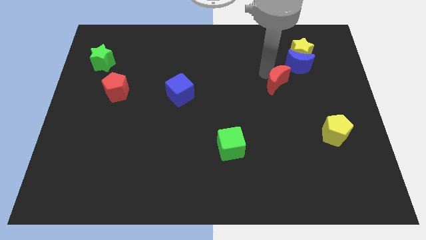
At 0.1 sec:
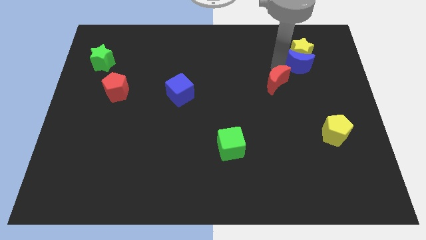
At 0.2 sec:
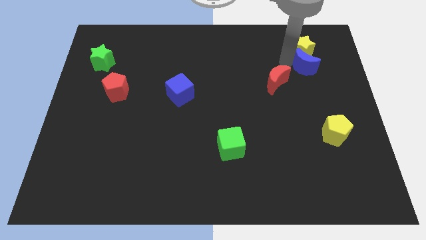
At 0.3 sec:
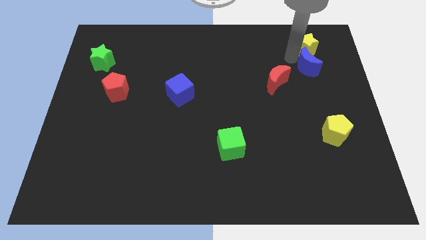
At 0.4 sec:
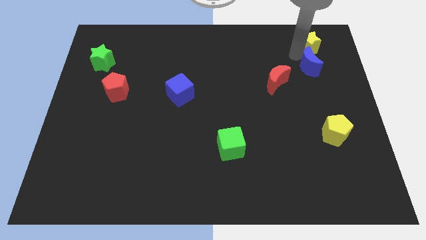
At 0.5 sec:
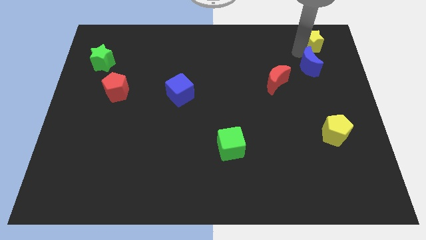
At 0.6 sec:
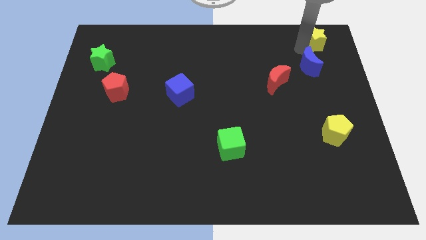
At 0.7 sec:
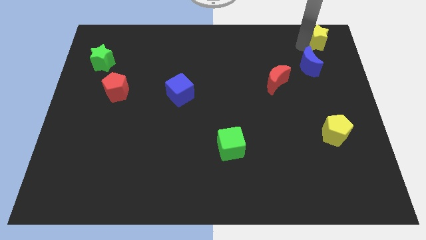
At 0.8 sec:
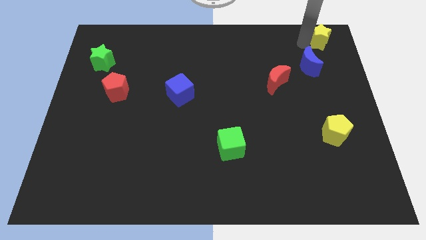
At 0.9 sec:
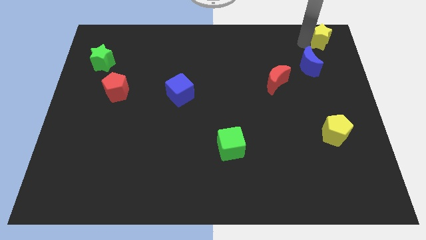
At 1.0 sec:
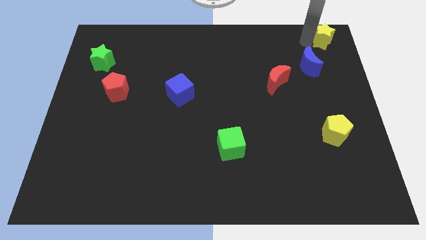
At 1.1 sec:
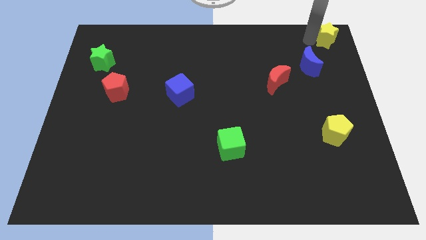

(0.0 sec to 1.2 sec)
separate the blue crescent and yellow star

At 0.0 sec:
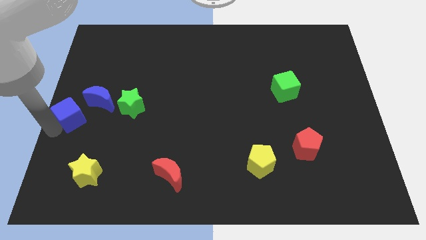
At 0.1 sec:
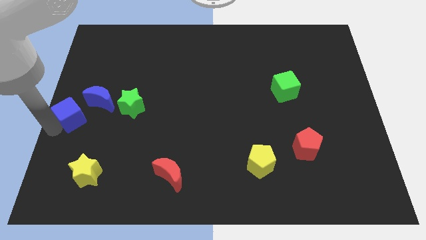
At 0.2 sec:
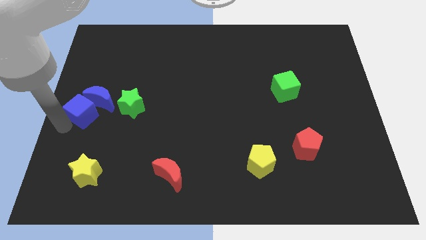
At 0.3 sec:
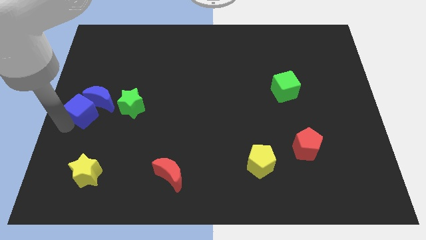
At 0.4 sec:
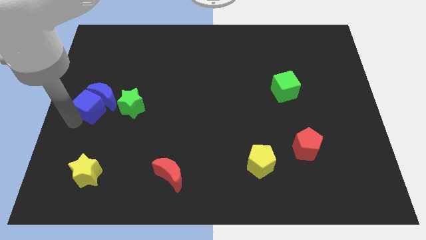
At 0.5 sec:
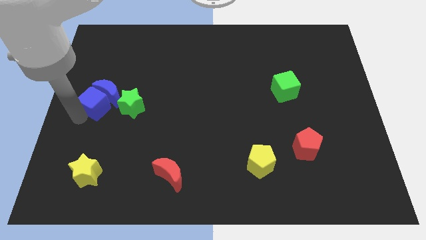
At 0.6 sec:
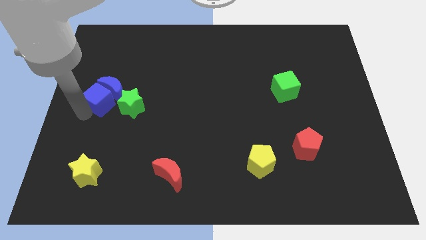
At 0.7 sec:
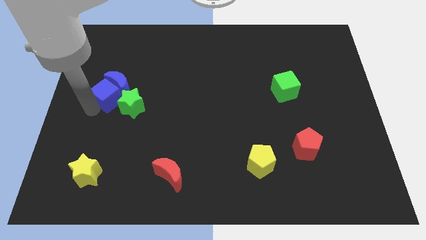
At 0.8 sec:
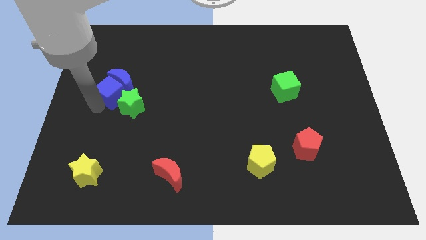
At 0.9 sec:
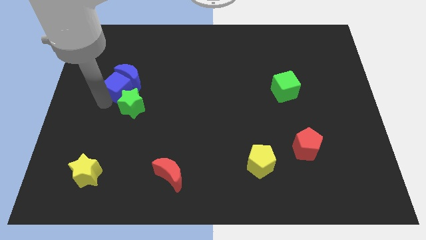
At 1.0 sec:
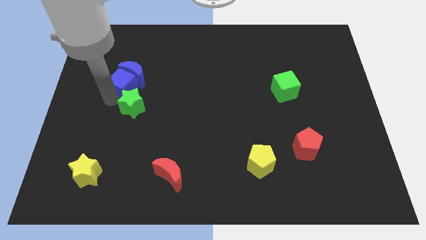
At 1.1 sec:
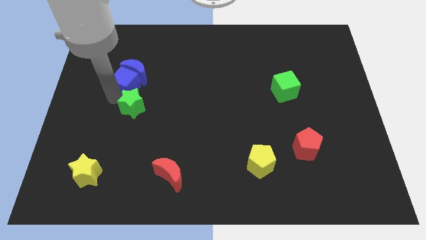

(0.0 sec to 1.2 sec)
move the blue blocks towards up

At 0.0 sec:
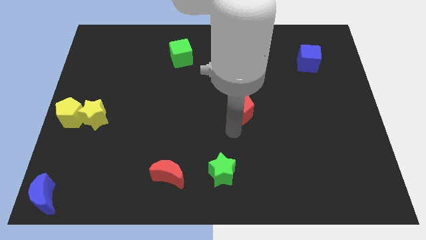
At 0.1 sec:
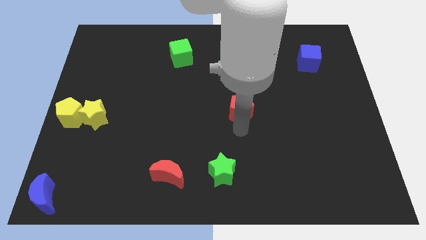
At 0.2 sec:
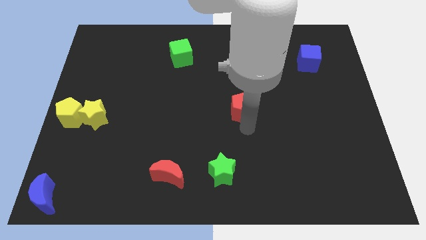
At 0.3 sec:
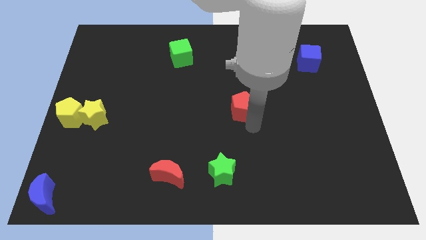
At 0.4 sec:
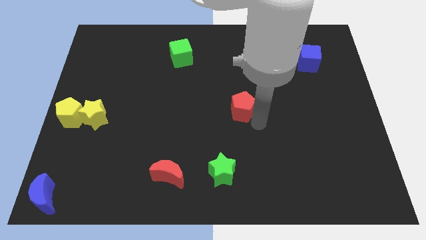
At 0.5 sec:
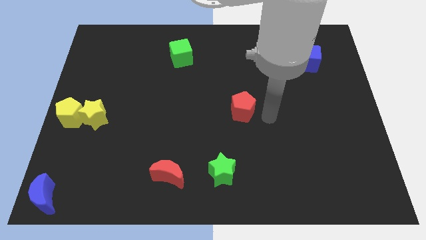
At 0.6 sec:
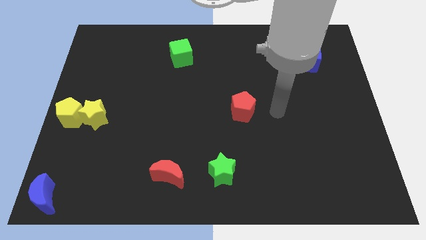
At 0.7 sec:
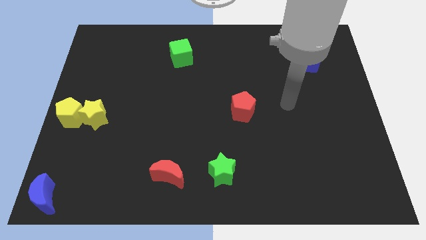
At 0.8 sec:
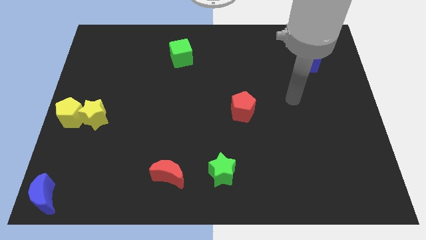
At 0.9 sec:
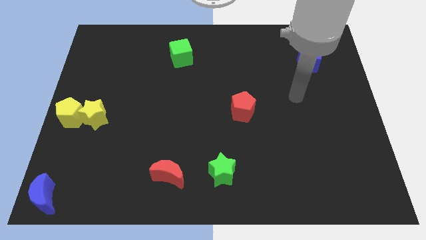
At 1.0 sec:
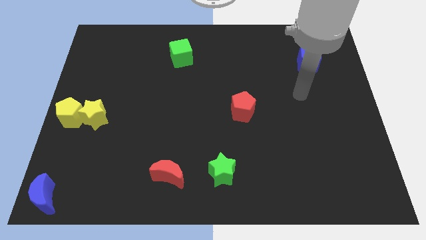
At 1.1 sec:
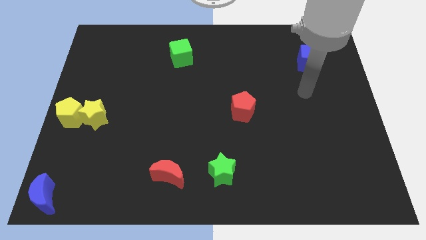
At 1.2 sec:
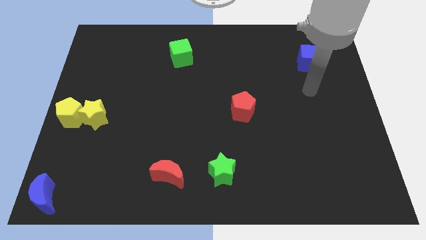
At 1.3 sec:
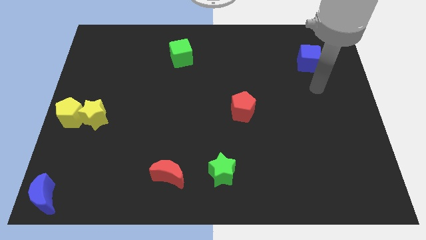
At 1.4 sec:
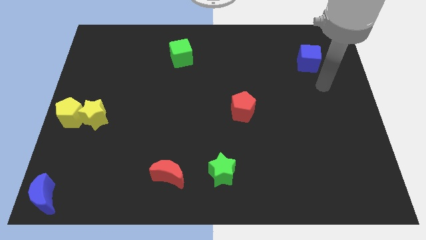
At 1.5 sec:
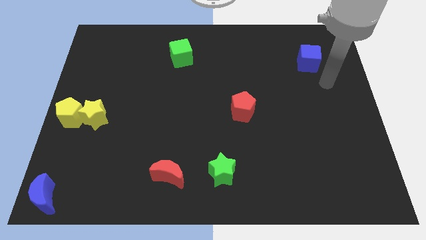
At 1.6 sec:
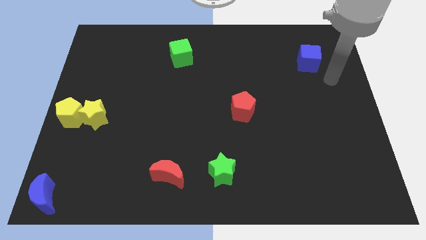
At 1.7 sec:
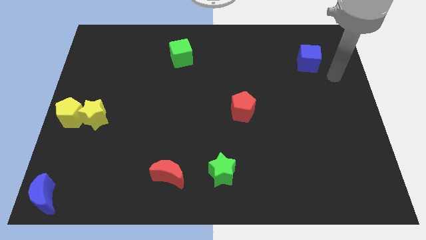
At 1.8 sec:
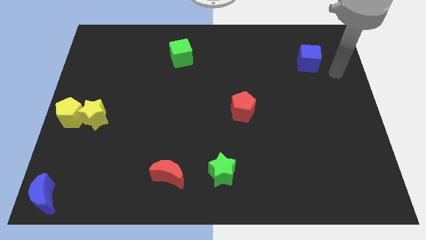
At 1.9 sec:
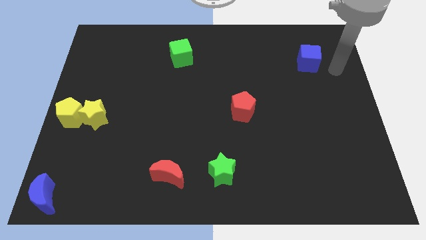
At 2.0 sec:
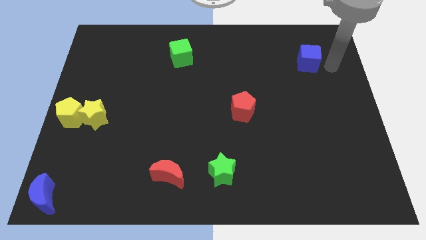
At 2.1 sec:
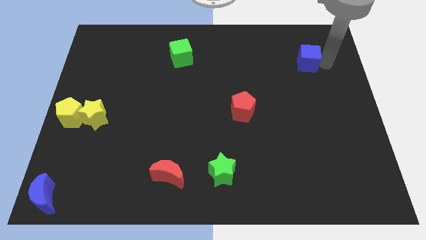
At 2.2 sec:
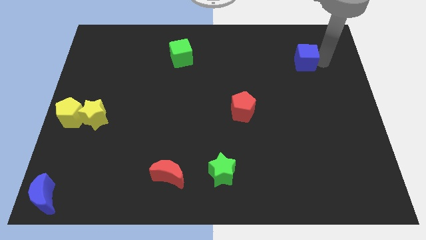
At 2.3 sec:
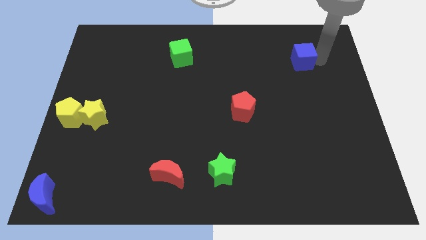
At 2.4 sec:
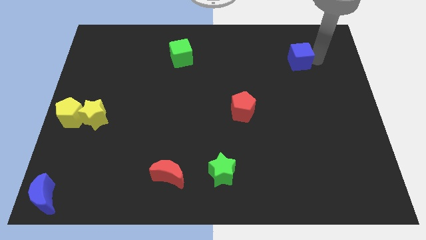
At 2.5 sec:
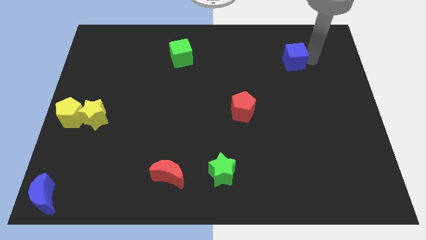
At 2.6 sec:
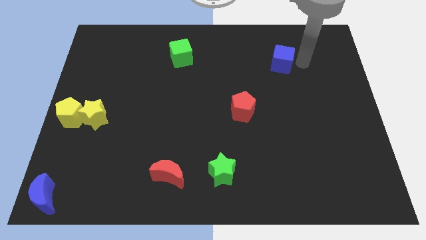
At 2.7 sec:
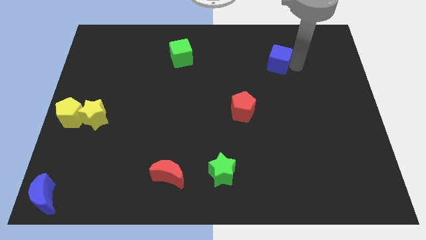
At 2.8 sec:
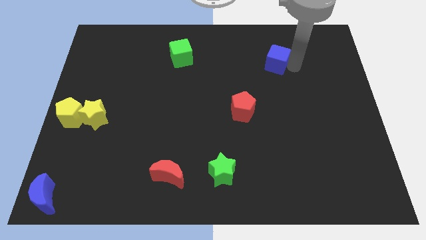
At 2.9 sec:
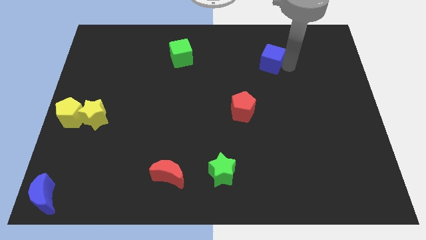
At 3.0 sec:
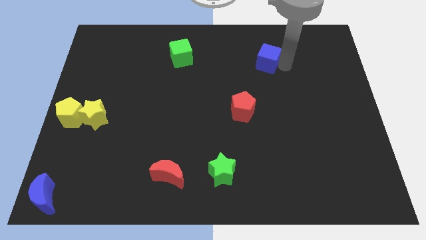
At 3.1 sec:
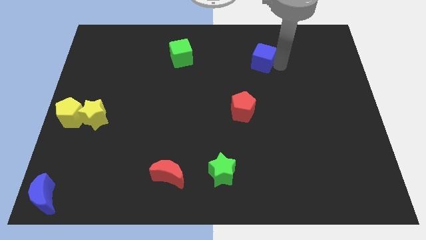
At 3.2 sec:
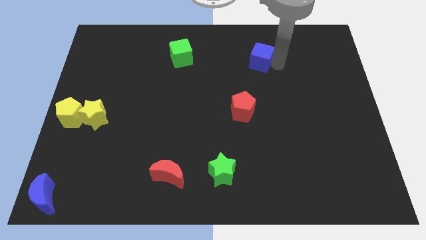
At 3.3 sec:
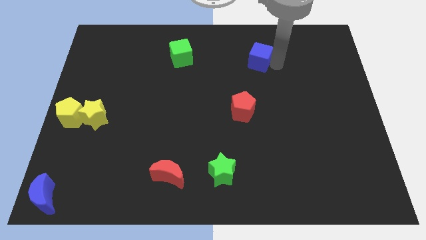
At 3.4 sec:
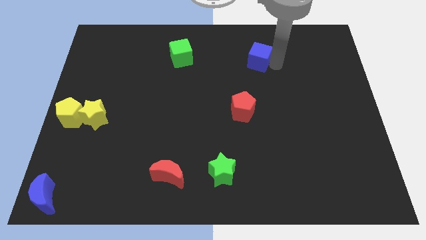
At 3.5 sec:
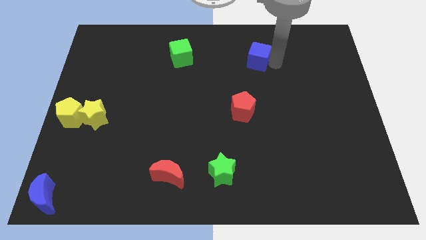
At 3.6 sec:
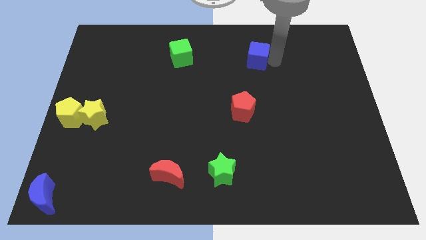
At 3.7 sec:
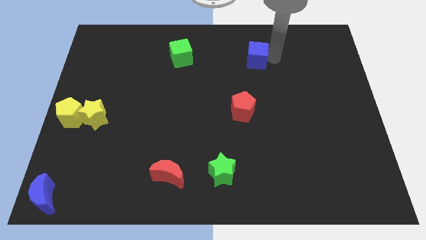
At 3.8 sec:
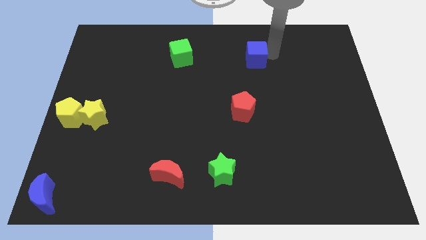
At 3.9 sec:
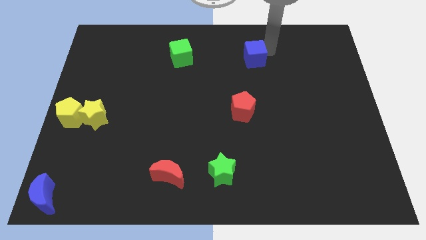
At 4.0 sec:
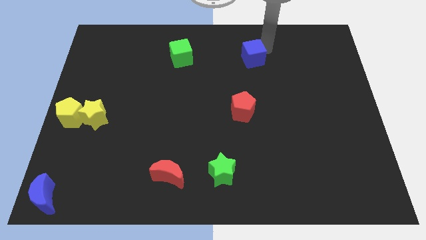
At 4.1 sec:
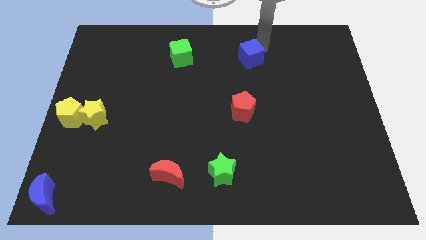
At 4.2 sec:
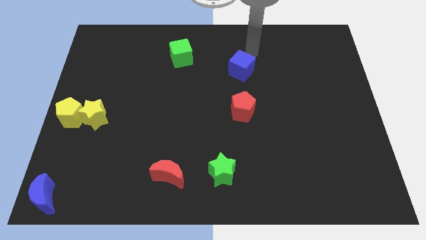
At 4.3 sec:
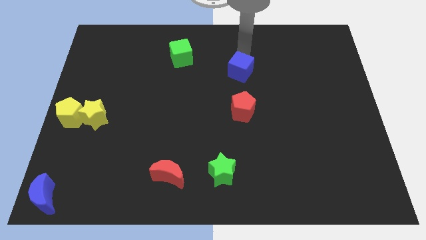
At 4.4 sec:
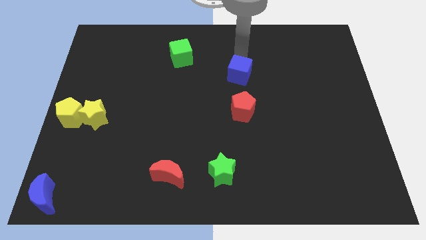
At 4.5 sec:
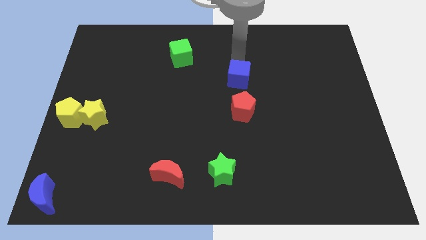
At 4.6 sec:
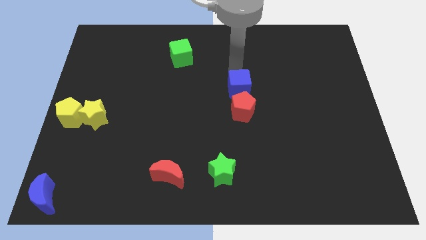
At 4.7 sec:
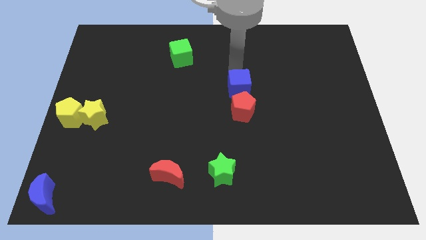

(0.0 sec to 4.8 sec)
place the blue cube at the top of the red pentagon

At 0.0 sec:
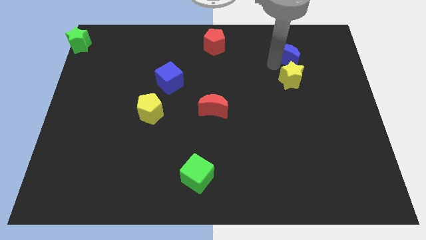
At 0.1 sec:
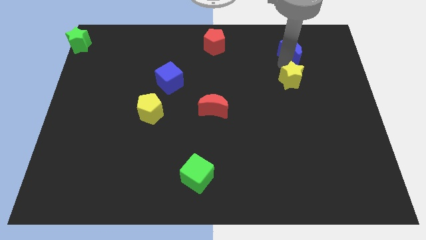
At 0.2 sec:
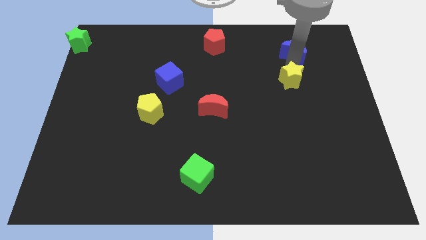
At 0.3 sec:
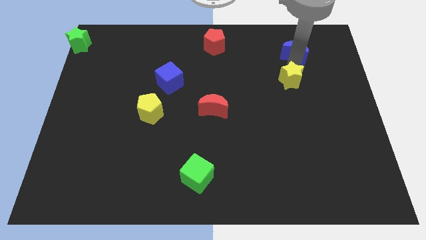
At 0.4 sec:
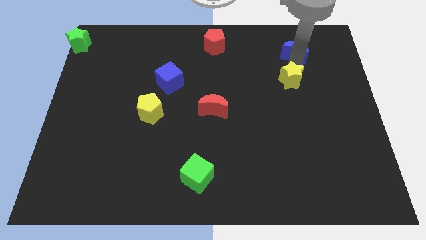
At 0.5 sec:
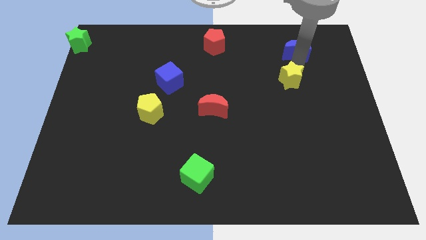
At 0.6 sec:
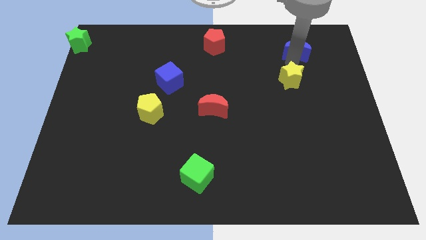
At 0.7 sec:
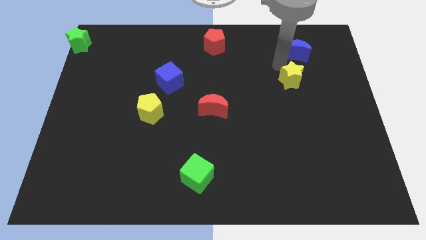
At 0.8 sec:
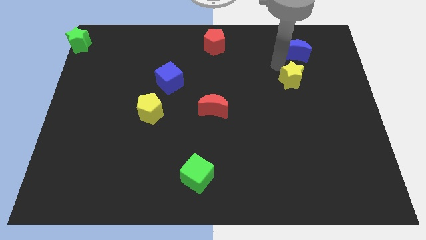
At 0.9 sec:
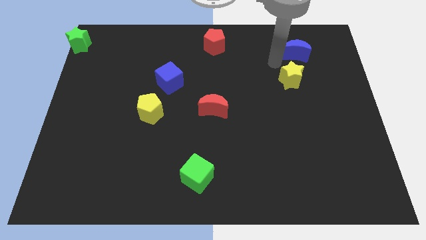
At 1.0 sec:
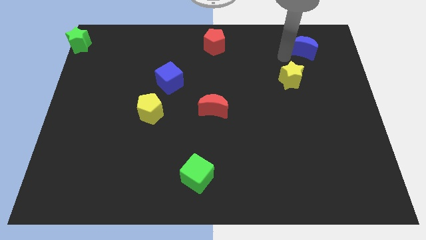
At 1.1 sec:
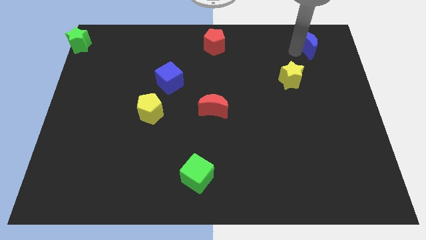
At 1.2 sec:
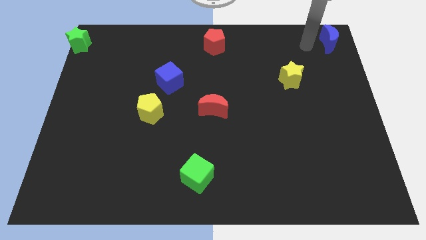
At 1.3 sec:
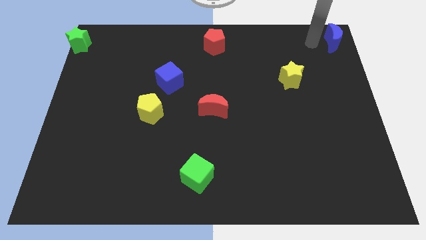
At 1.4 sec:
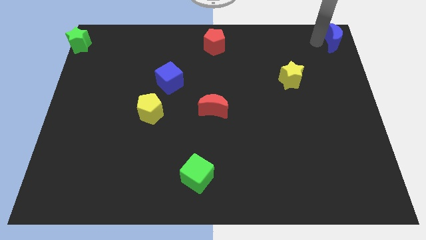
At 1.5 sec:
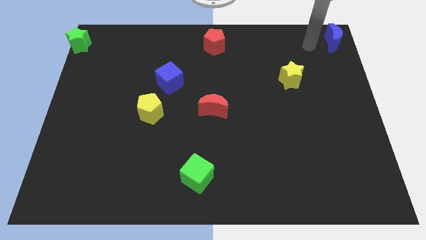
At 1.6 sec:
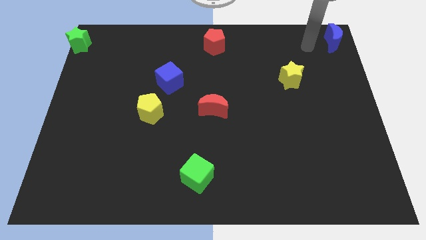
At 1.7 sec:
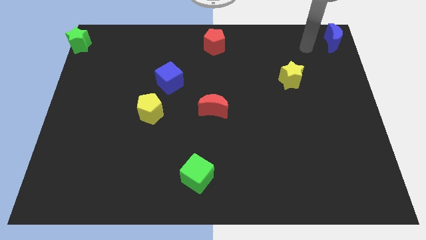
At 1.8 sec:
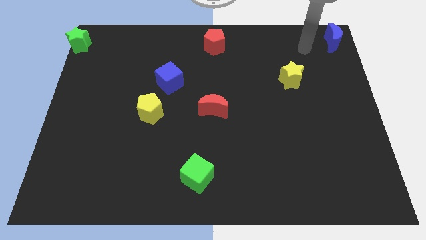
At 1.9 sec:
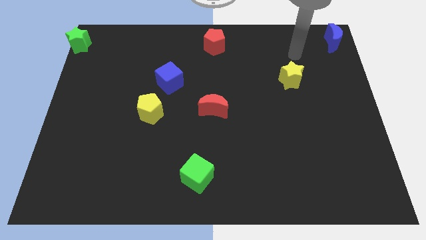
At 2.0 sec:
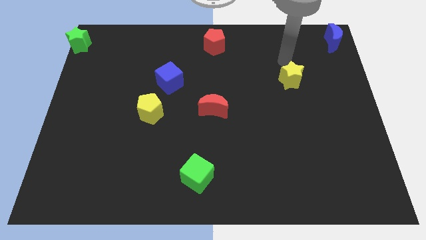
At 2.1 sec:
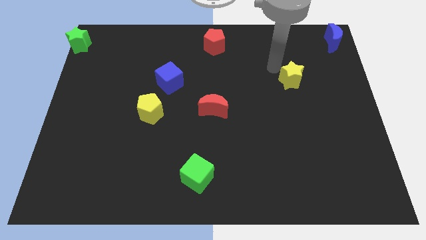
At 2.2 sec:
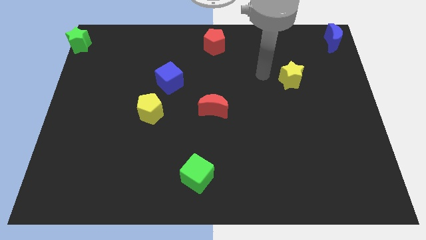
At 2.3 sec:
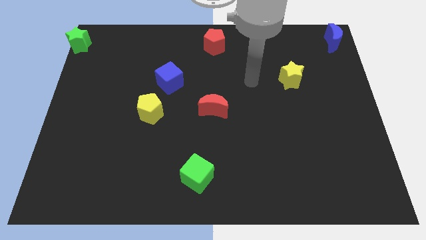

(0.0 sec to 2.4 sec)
move blue crescent to the top right corner of the board
